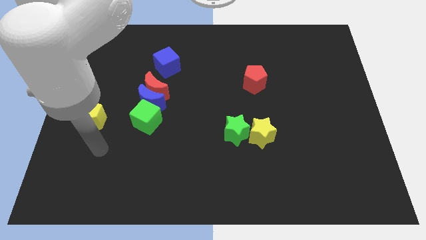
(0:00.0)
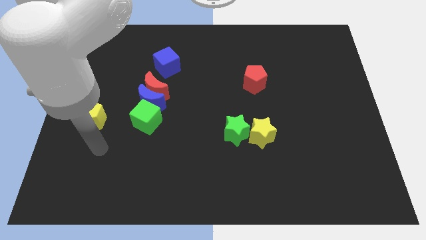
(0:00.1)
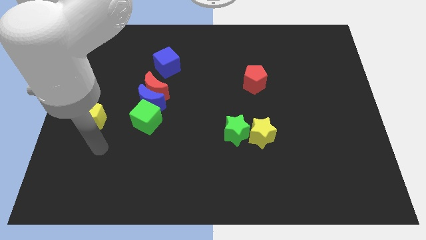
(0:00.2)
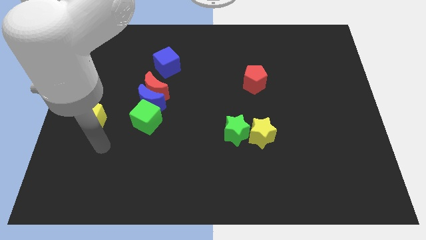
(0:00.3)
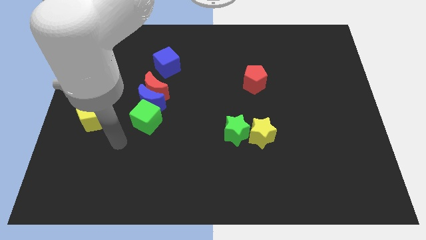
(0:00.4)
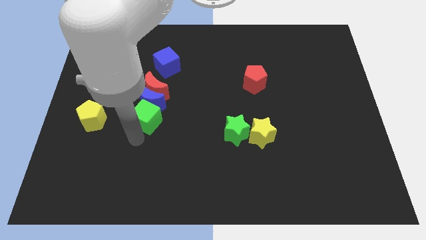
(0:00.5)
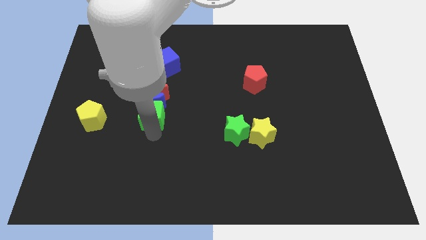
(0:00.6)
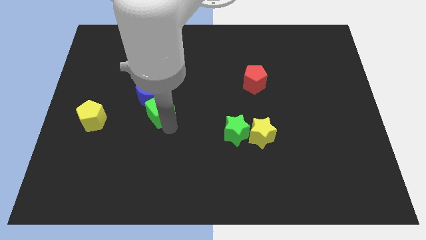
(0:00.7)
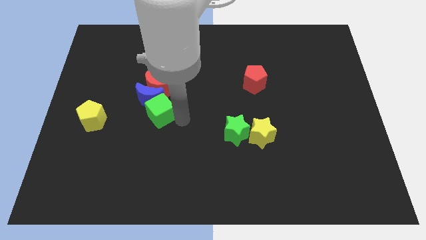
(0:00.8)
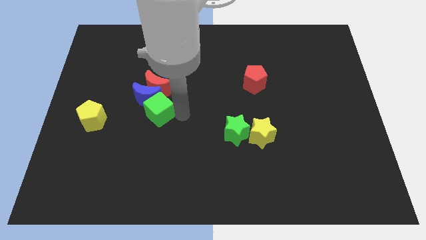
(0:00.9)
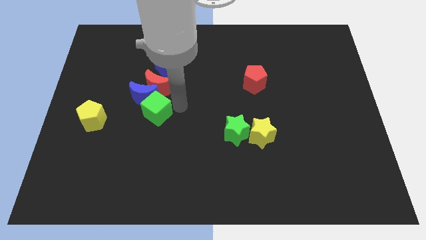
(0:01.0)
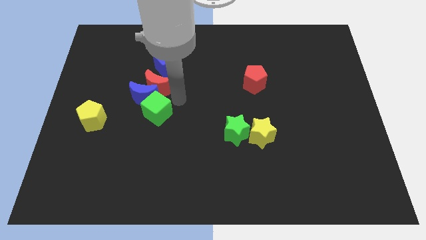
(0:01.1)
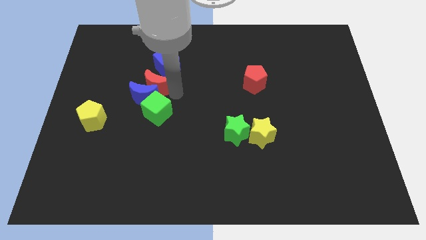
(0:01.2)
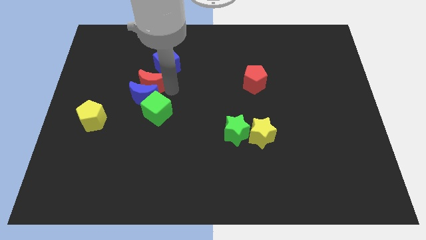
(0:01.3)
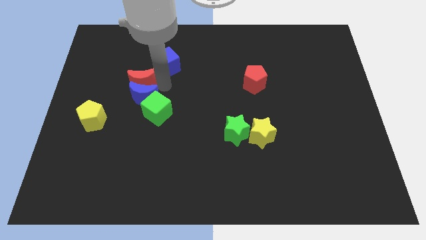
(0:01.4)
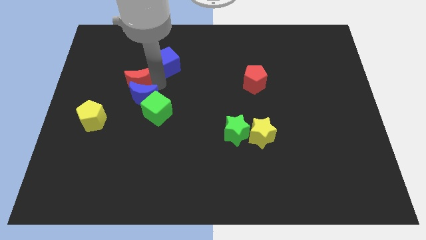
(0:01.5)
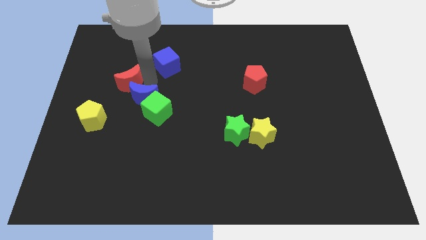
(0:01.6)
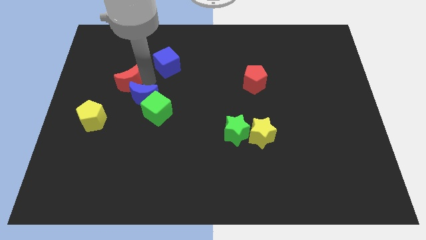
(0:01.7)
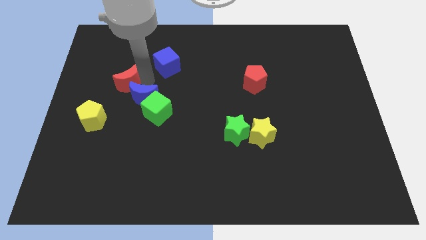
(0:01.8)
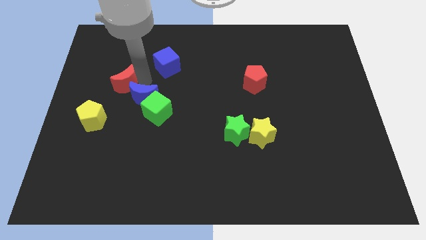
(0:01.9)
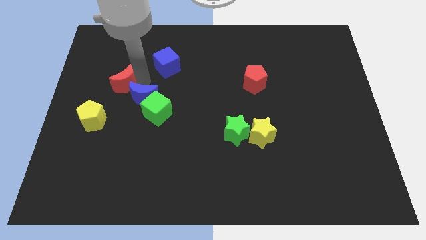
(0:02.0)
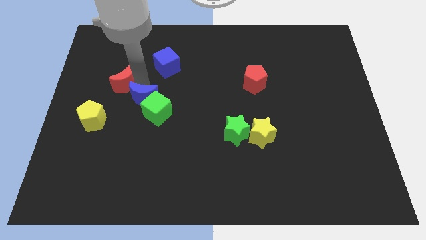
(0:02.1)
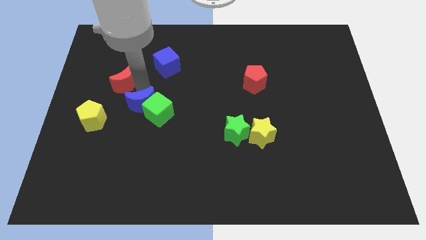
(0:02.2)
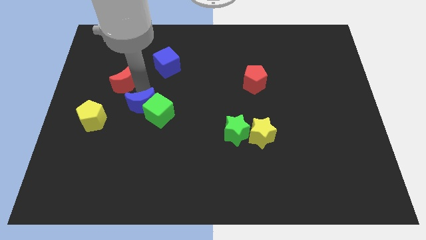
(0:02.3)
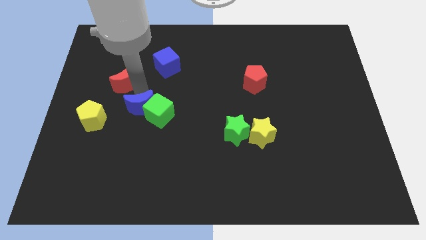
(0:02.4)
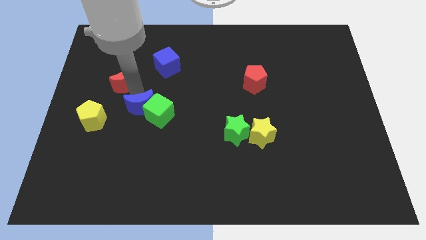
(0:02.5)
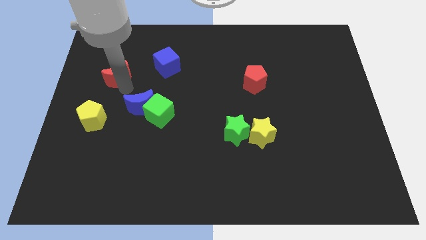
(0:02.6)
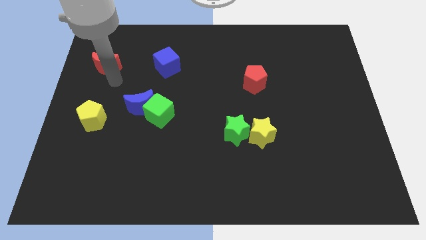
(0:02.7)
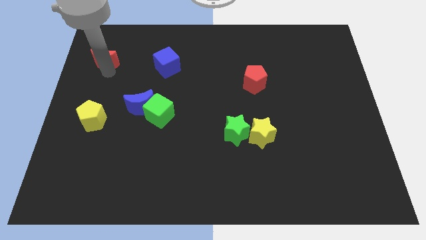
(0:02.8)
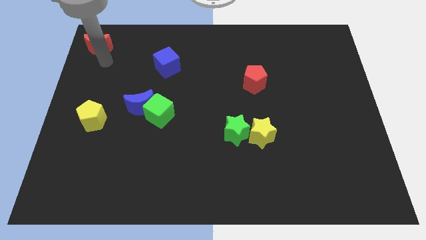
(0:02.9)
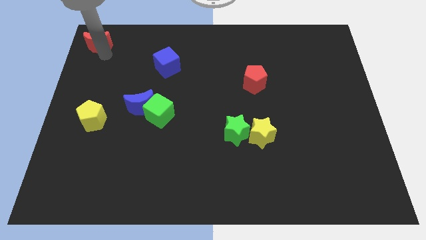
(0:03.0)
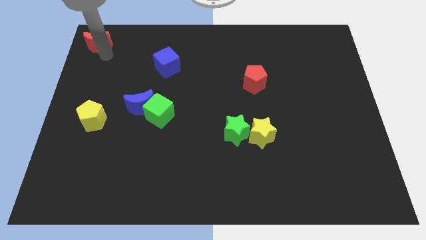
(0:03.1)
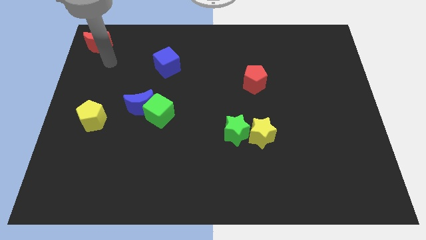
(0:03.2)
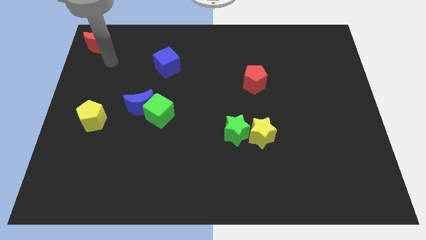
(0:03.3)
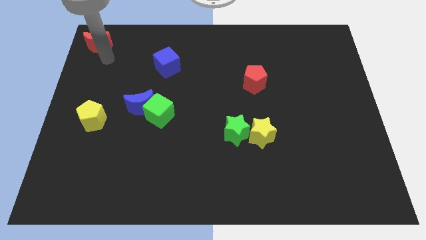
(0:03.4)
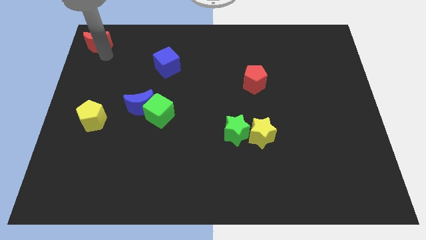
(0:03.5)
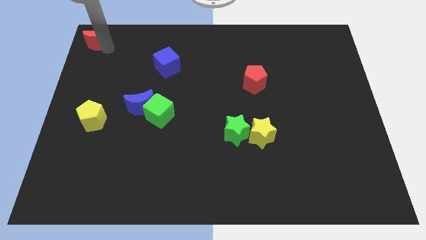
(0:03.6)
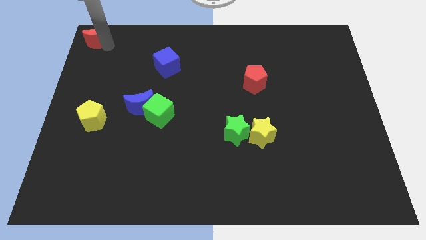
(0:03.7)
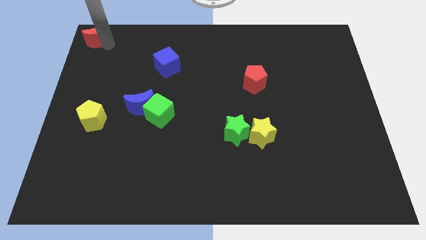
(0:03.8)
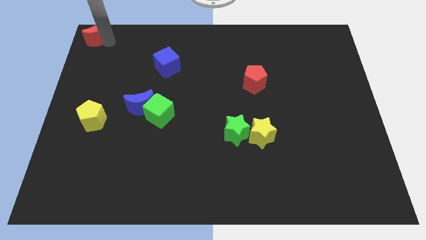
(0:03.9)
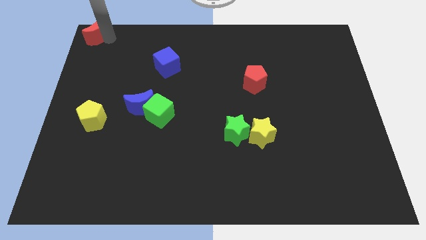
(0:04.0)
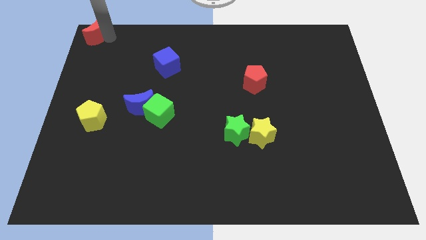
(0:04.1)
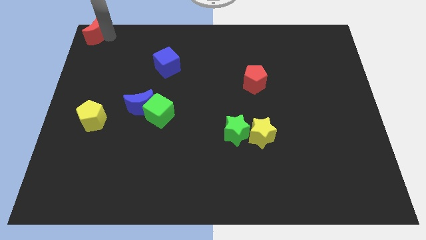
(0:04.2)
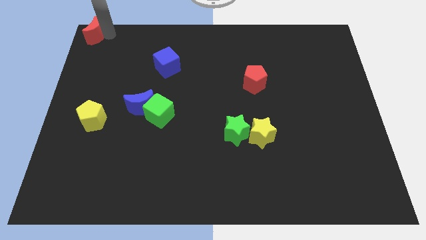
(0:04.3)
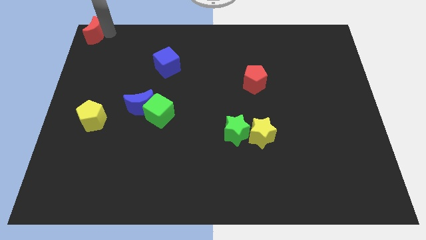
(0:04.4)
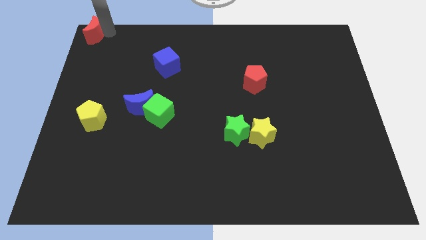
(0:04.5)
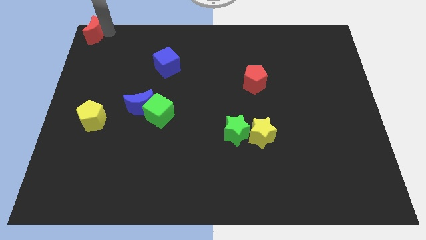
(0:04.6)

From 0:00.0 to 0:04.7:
push the red moon to the top left corner of the board

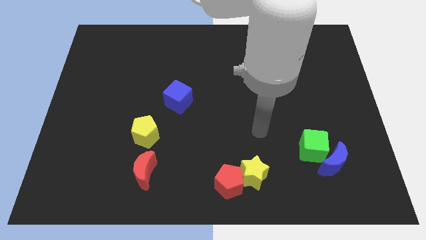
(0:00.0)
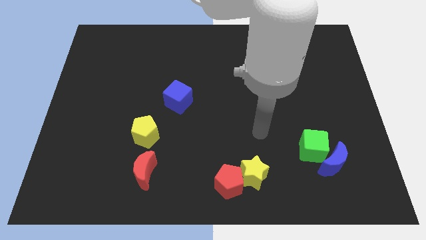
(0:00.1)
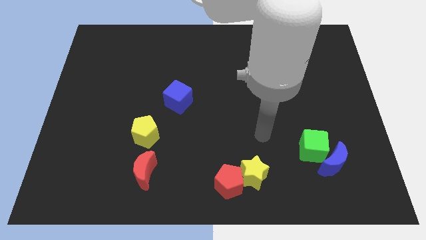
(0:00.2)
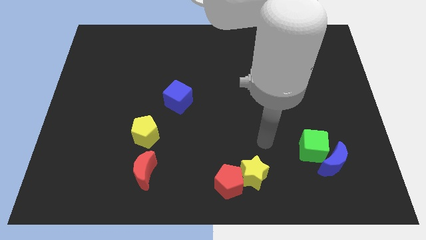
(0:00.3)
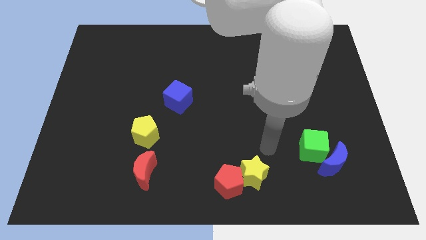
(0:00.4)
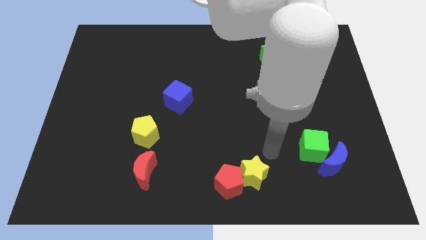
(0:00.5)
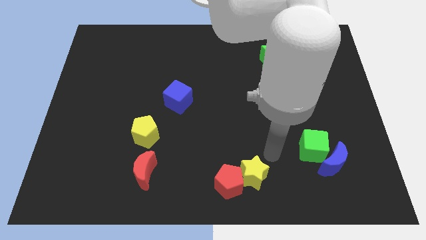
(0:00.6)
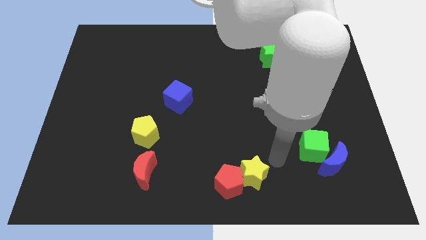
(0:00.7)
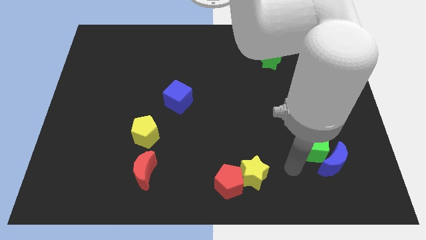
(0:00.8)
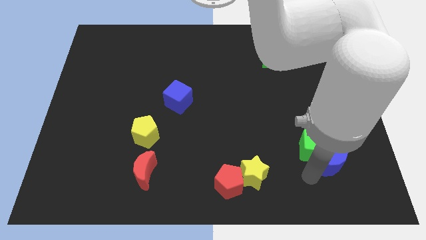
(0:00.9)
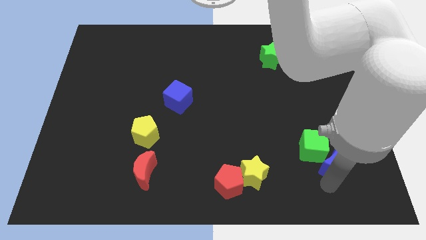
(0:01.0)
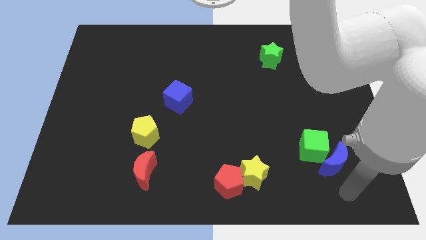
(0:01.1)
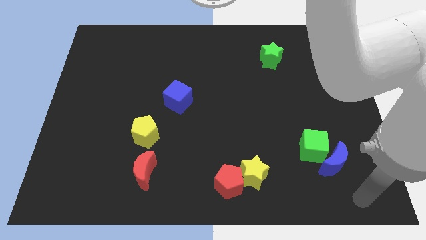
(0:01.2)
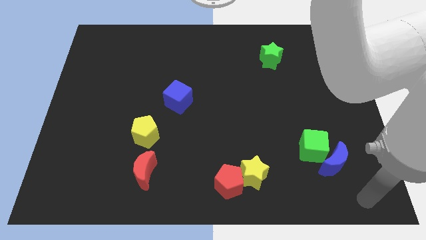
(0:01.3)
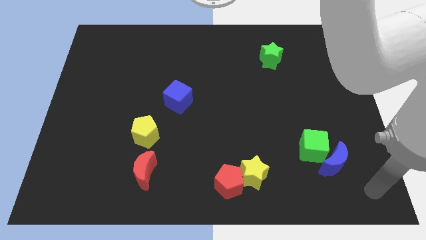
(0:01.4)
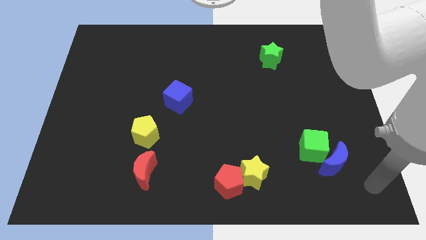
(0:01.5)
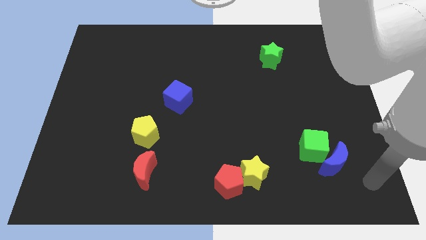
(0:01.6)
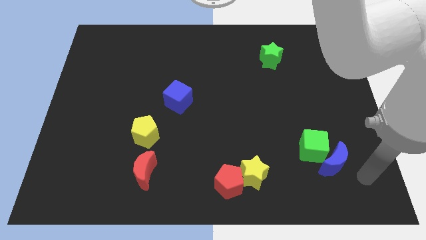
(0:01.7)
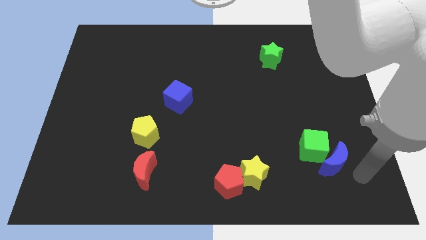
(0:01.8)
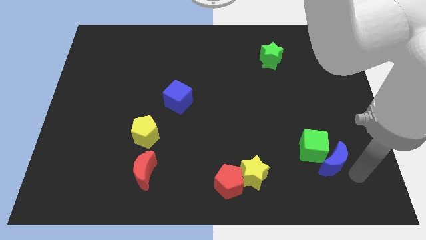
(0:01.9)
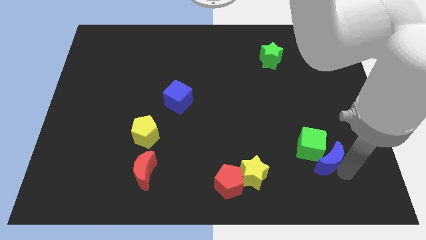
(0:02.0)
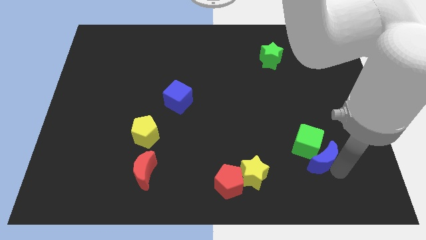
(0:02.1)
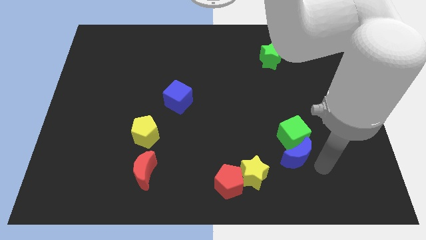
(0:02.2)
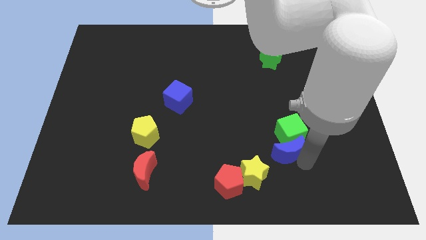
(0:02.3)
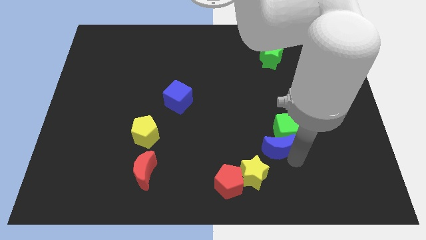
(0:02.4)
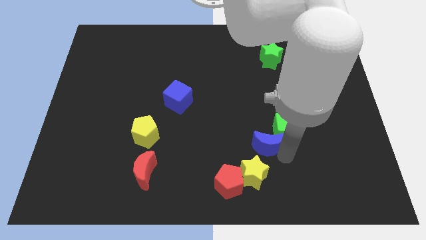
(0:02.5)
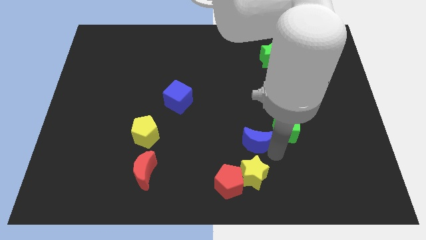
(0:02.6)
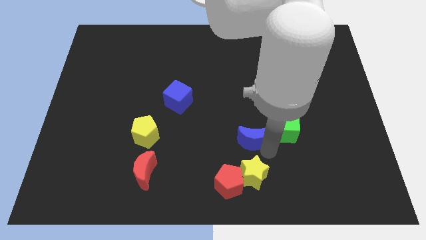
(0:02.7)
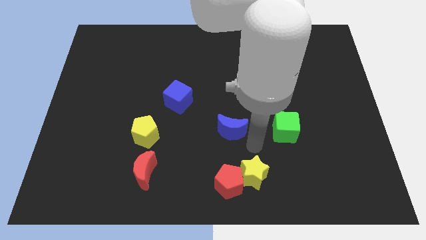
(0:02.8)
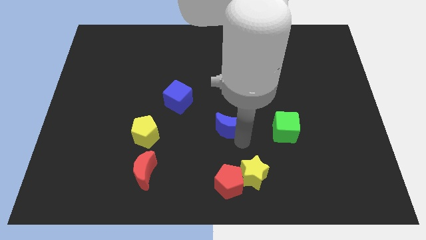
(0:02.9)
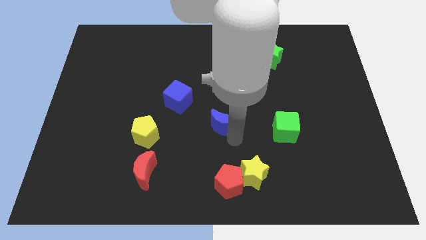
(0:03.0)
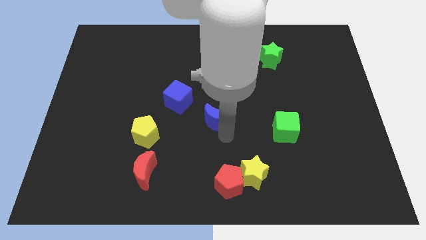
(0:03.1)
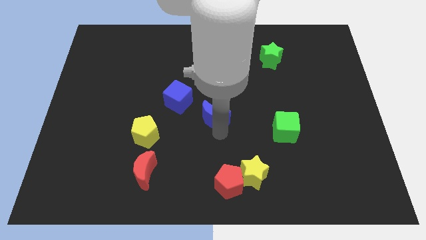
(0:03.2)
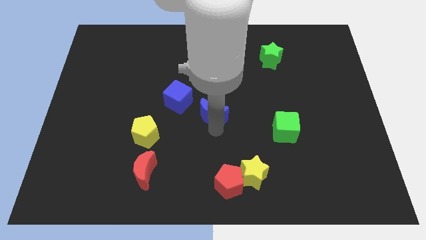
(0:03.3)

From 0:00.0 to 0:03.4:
separate the blue crescent from the green cube

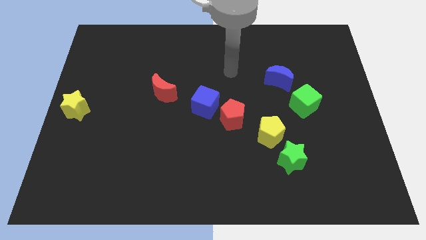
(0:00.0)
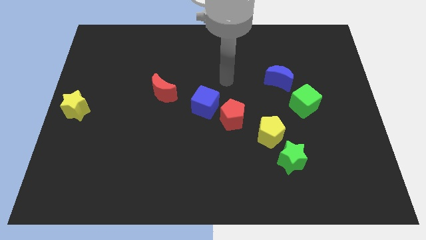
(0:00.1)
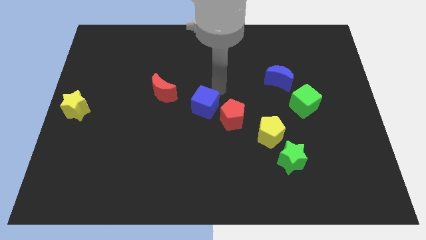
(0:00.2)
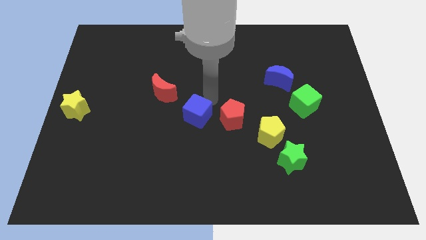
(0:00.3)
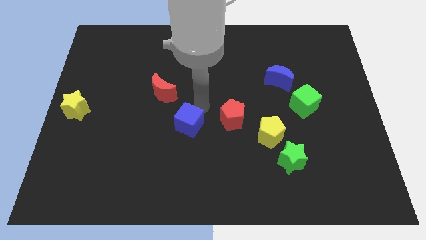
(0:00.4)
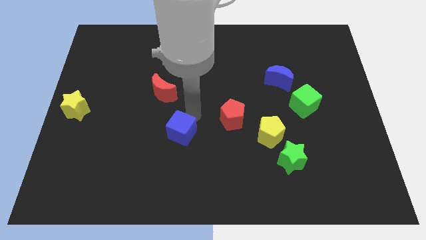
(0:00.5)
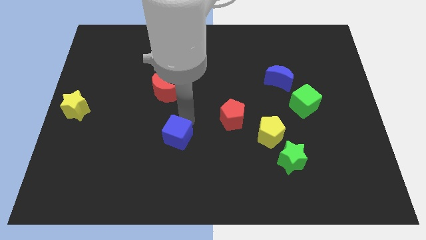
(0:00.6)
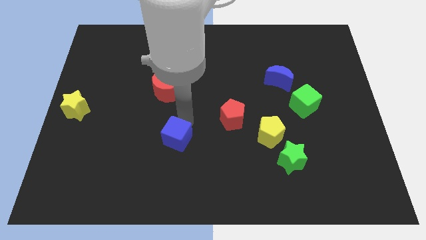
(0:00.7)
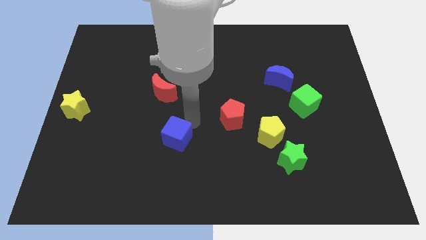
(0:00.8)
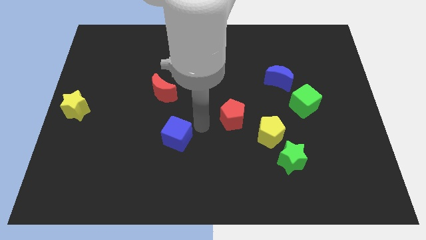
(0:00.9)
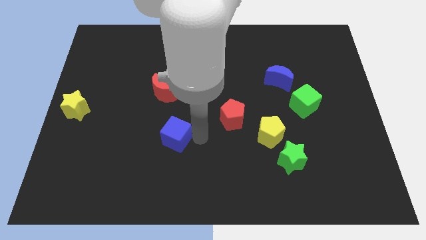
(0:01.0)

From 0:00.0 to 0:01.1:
push blue cube slightly down
